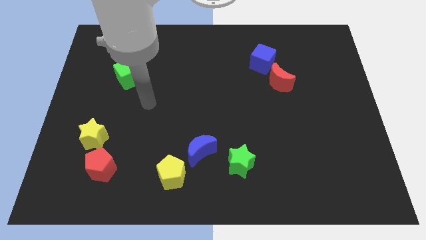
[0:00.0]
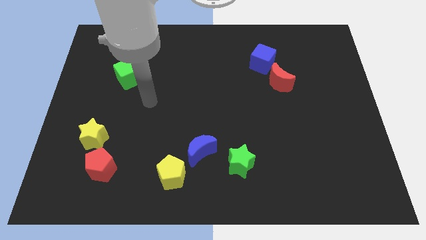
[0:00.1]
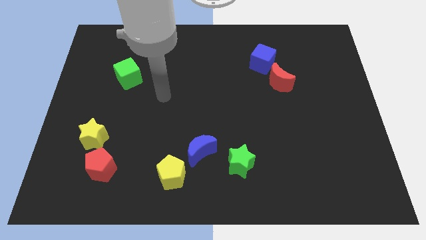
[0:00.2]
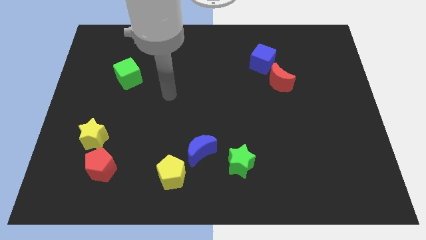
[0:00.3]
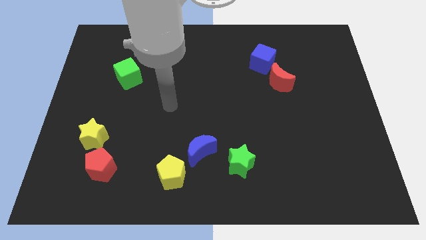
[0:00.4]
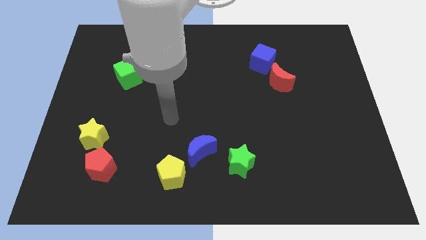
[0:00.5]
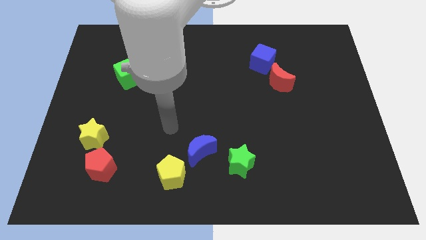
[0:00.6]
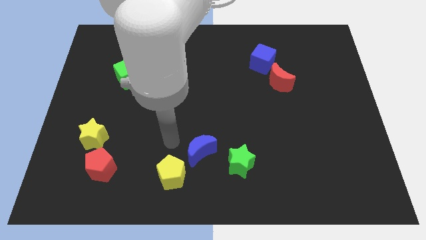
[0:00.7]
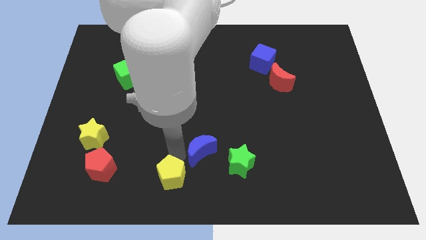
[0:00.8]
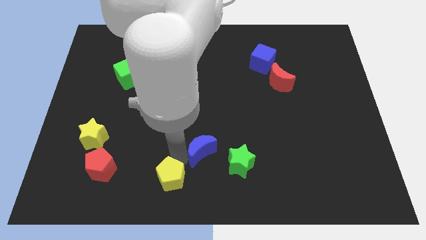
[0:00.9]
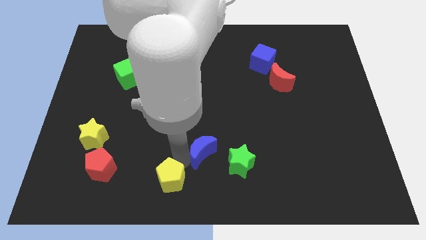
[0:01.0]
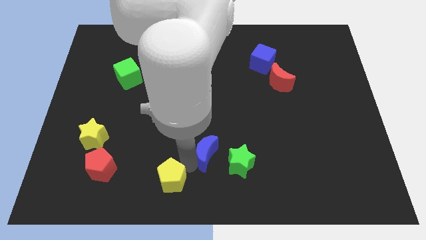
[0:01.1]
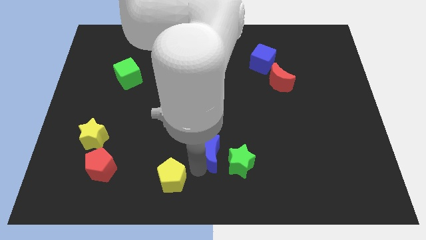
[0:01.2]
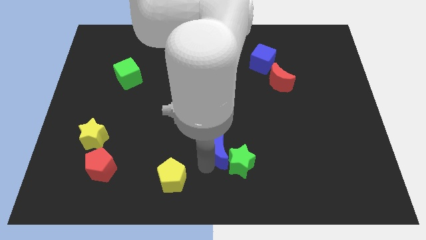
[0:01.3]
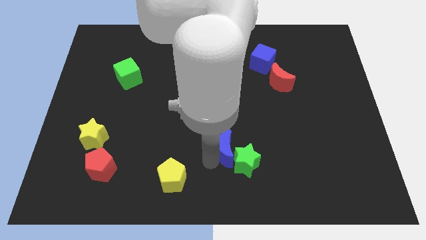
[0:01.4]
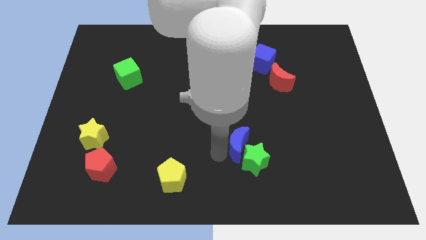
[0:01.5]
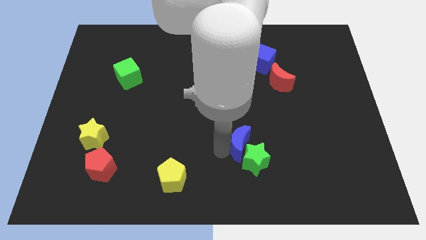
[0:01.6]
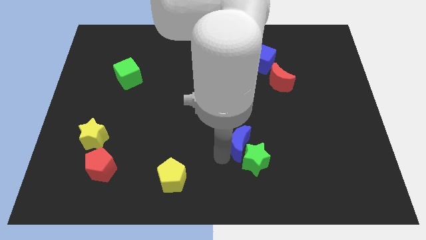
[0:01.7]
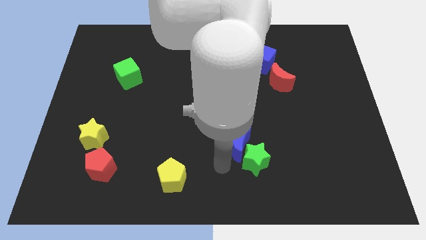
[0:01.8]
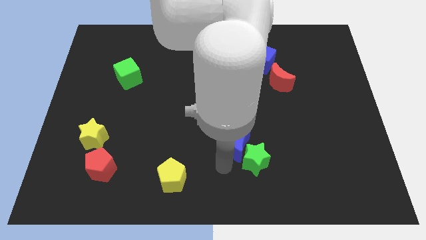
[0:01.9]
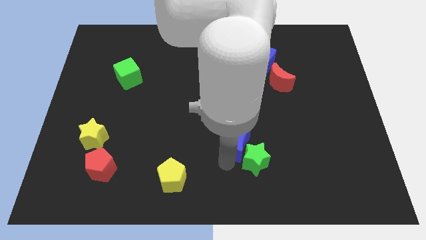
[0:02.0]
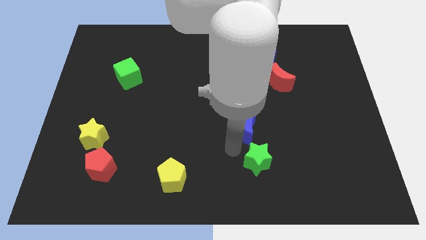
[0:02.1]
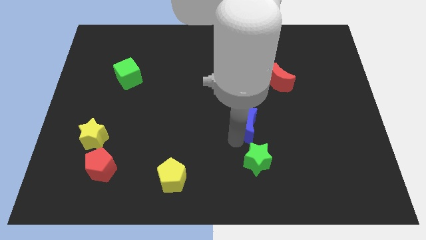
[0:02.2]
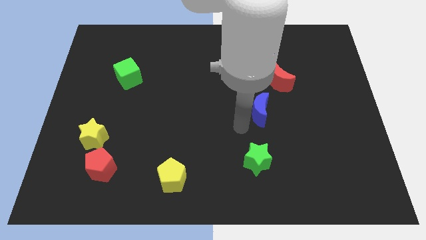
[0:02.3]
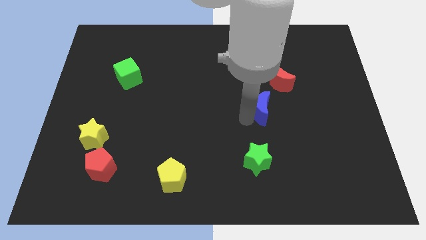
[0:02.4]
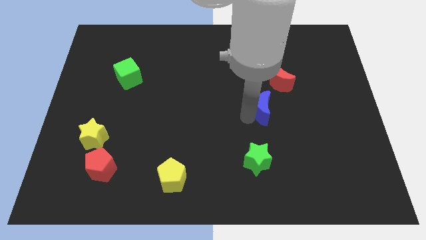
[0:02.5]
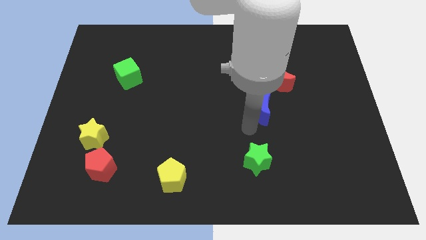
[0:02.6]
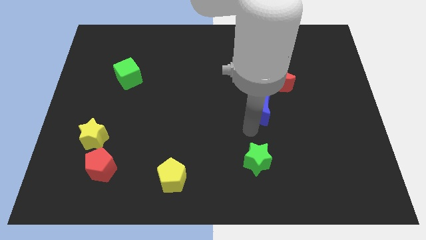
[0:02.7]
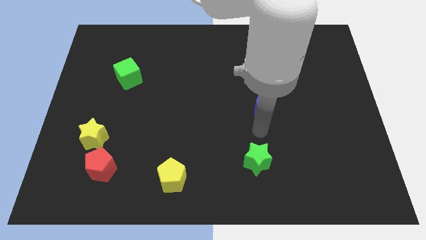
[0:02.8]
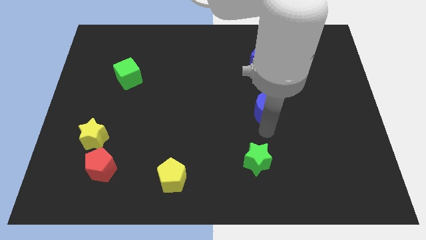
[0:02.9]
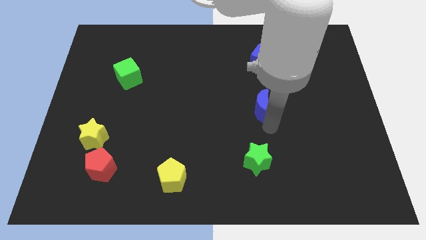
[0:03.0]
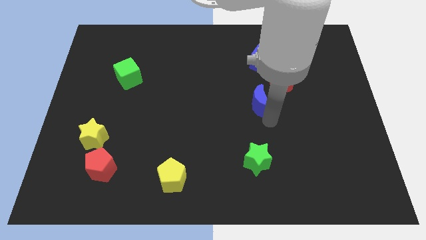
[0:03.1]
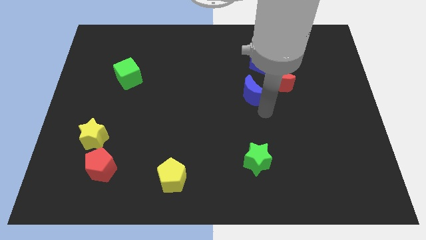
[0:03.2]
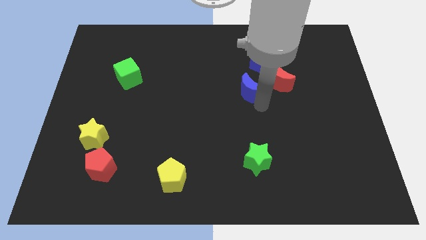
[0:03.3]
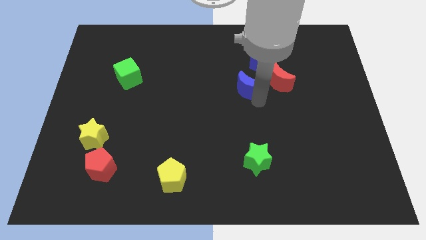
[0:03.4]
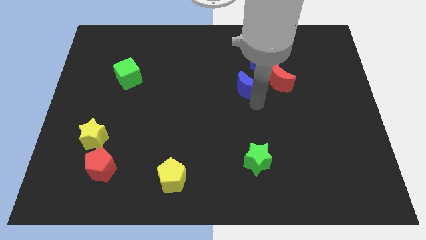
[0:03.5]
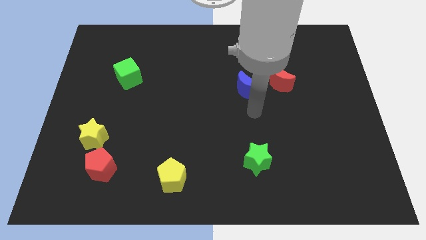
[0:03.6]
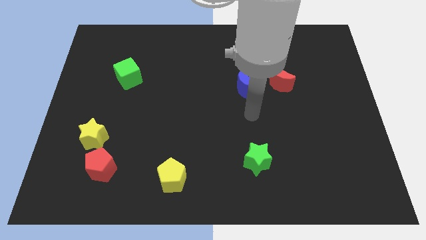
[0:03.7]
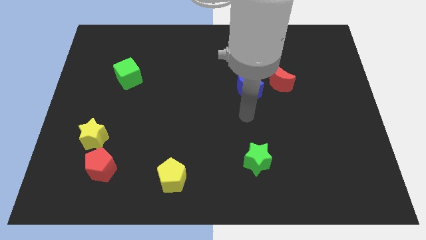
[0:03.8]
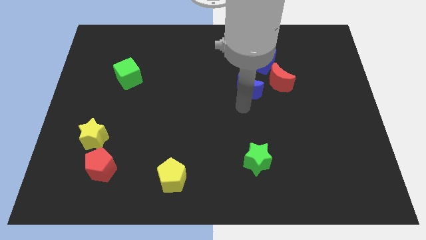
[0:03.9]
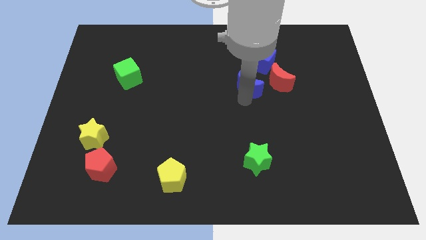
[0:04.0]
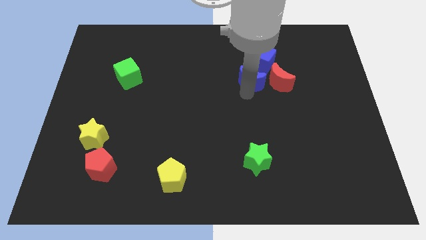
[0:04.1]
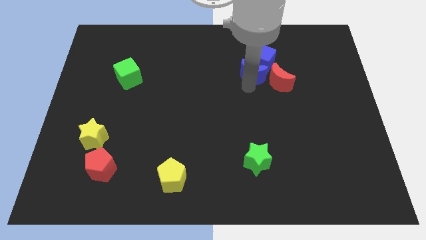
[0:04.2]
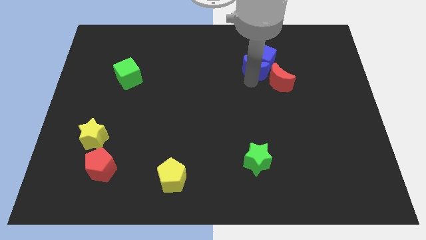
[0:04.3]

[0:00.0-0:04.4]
slide the blue moon into the blue cube

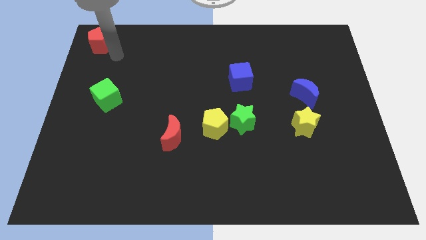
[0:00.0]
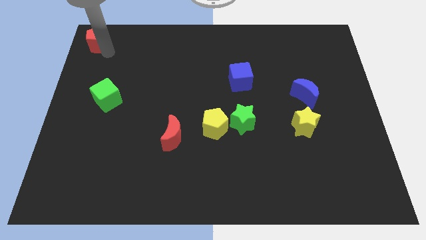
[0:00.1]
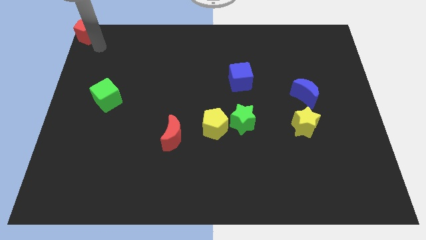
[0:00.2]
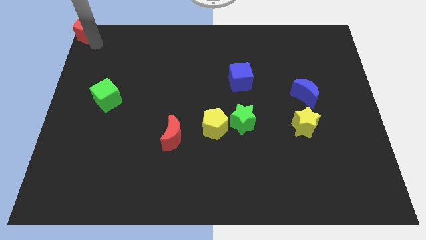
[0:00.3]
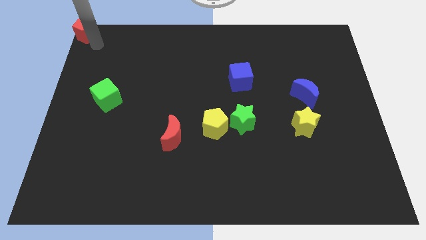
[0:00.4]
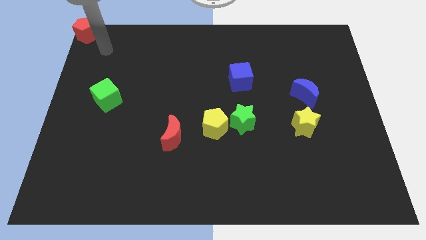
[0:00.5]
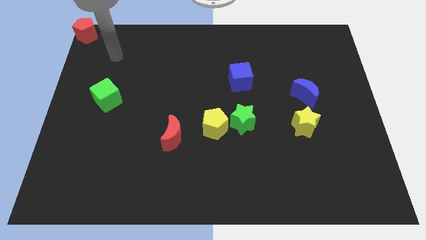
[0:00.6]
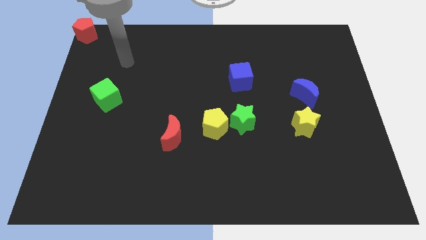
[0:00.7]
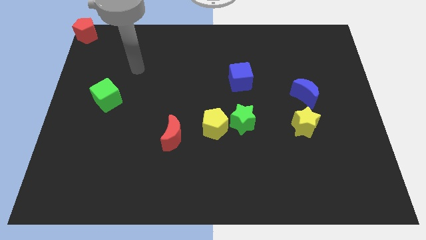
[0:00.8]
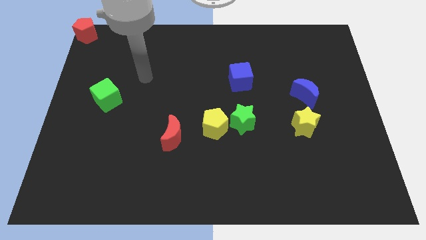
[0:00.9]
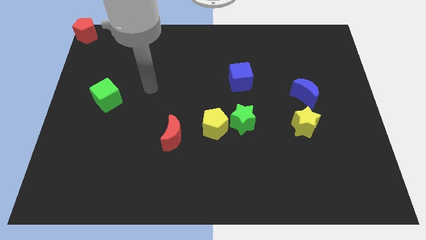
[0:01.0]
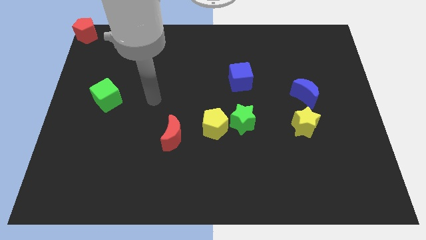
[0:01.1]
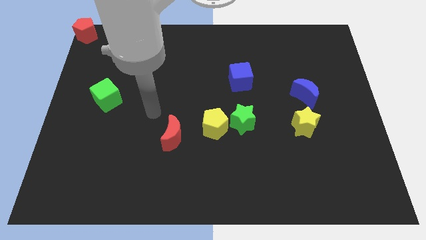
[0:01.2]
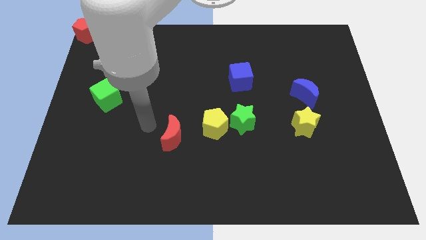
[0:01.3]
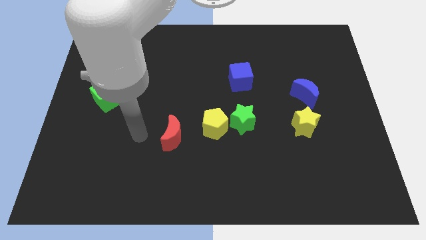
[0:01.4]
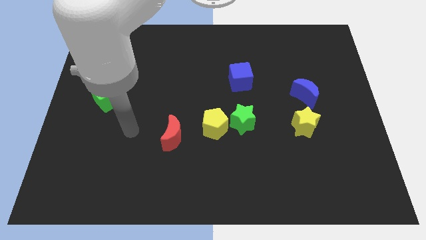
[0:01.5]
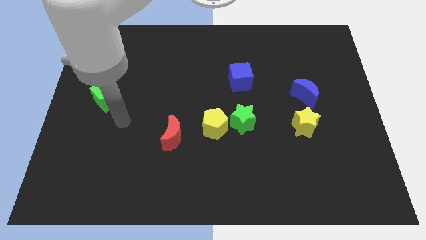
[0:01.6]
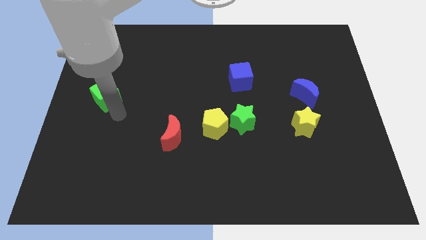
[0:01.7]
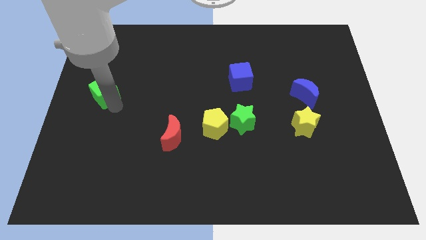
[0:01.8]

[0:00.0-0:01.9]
slightly push the green cube to the bottom right side of the red pentagon

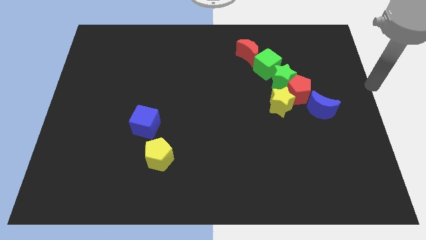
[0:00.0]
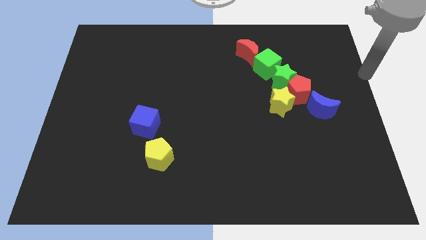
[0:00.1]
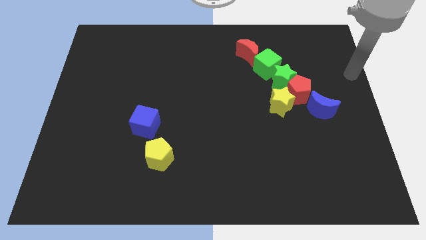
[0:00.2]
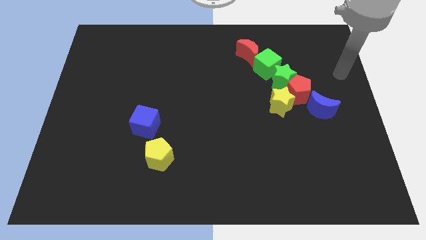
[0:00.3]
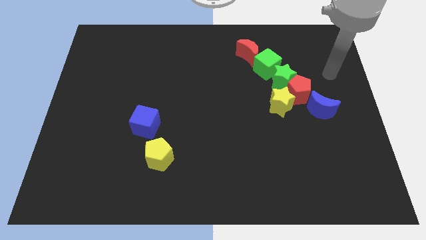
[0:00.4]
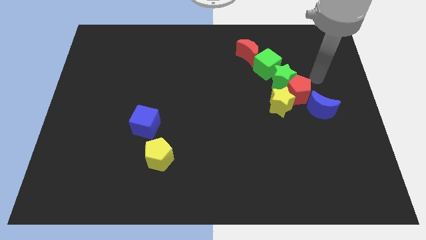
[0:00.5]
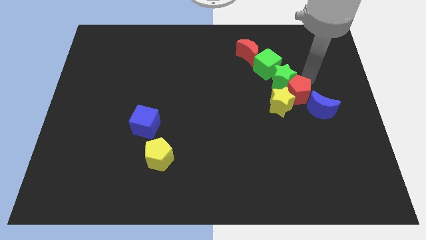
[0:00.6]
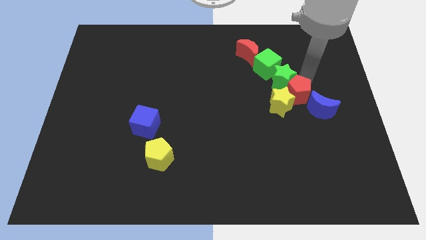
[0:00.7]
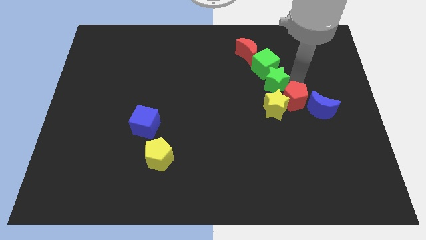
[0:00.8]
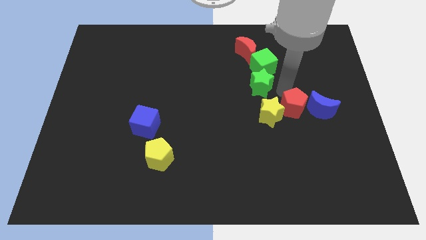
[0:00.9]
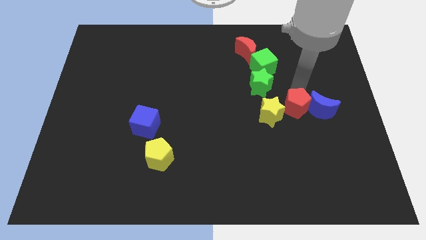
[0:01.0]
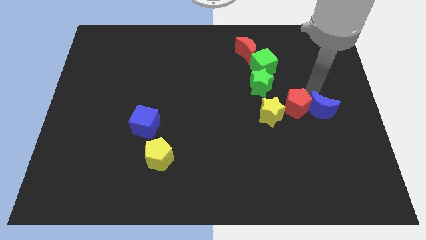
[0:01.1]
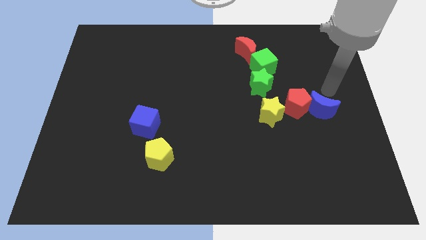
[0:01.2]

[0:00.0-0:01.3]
push the red pentagon to the centre of yellow star and blue crescent

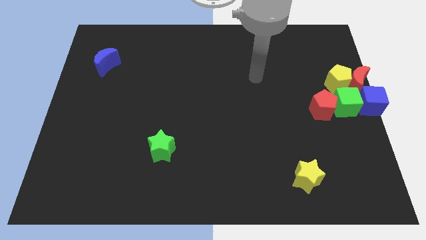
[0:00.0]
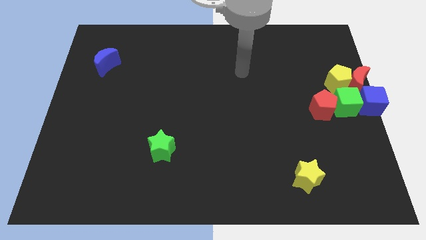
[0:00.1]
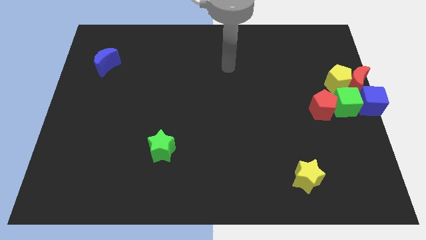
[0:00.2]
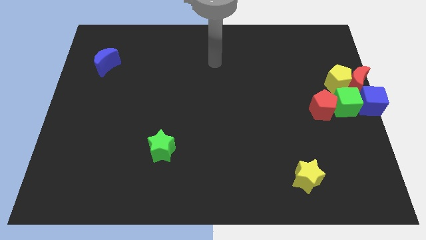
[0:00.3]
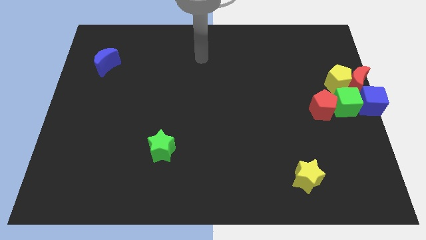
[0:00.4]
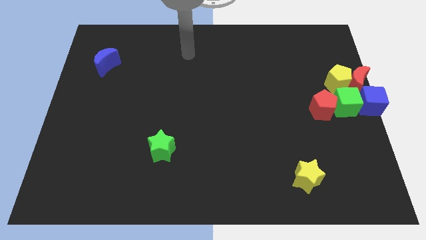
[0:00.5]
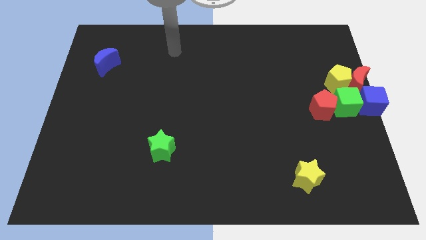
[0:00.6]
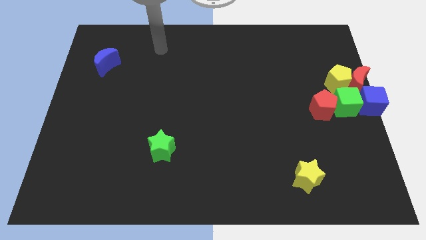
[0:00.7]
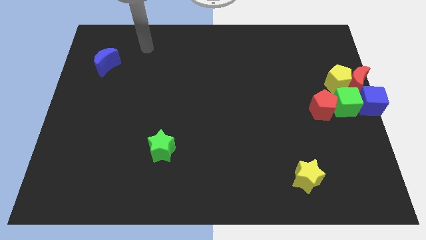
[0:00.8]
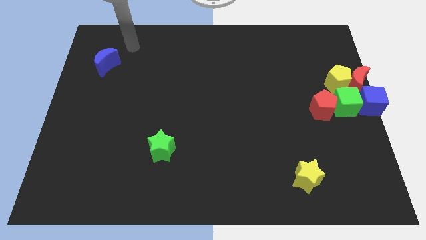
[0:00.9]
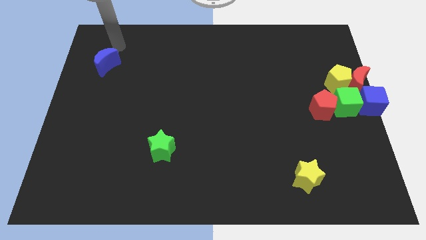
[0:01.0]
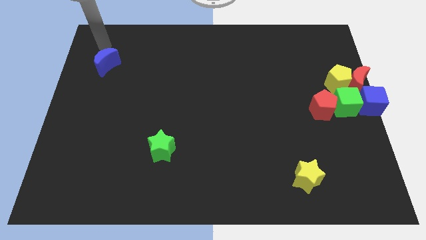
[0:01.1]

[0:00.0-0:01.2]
push blue moon slightly towards right

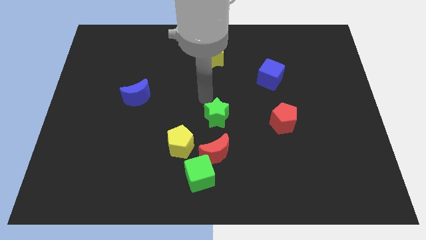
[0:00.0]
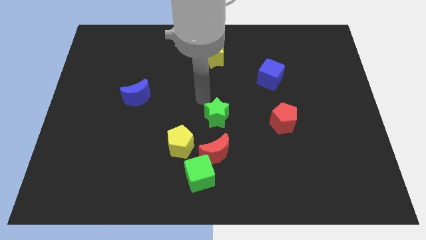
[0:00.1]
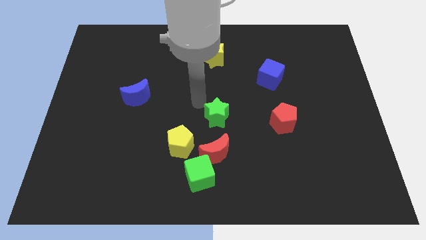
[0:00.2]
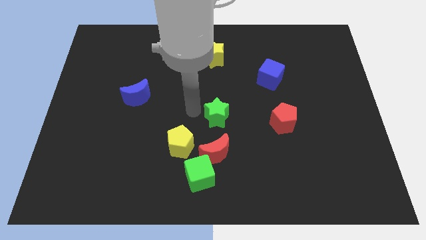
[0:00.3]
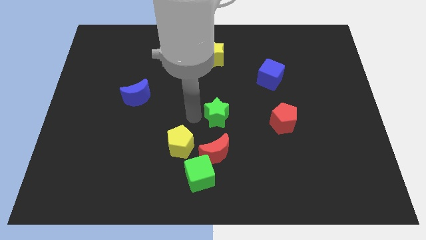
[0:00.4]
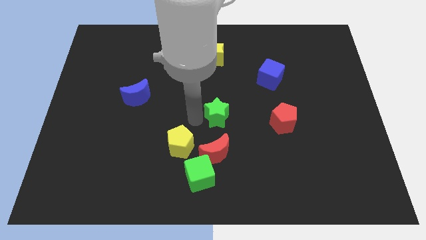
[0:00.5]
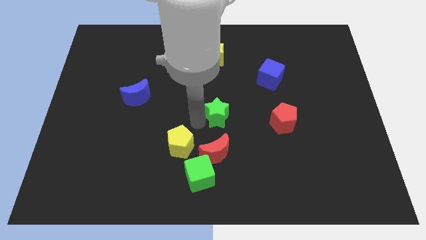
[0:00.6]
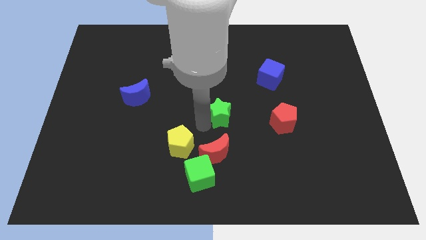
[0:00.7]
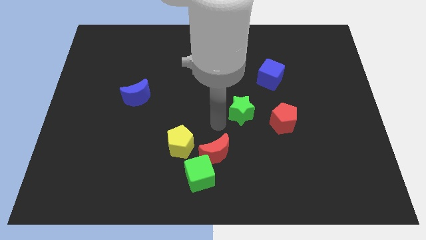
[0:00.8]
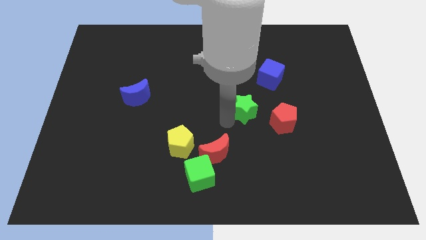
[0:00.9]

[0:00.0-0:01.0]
move green star towards red pentagon
